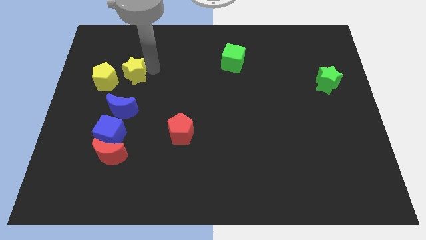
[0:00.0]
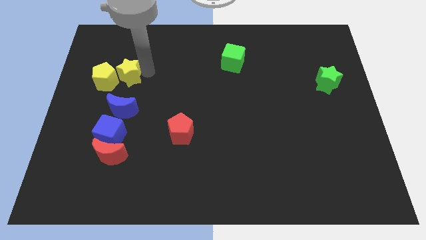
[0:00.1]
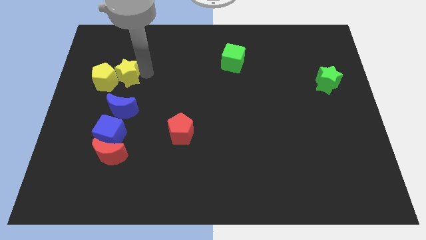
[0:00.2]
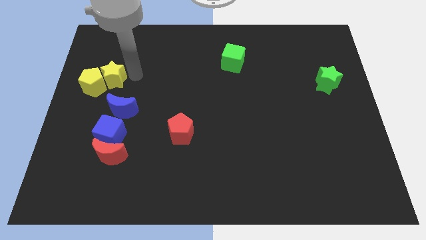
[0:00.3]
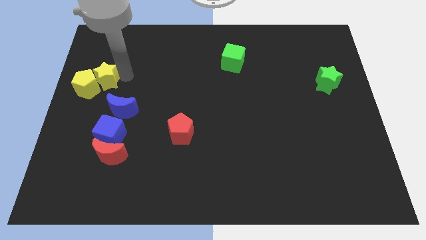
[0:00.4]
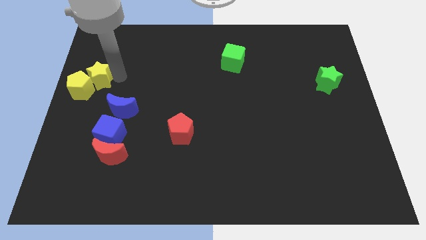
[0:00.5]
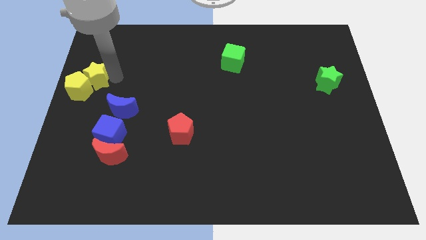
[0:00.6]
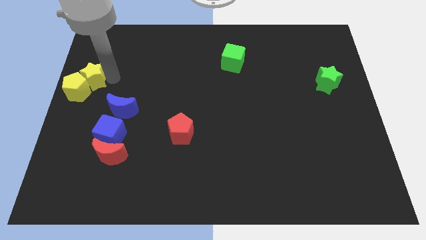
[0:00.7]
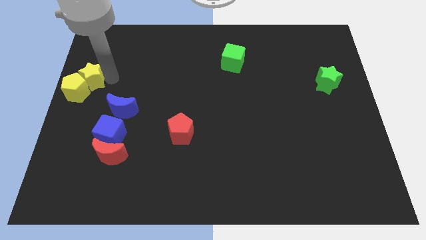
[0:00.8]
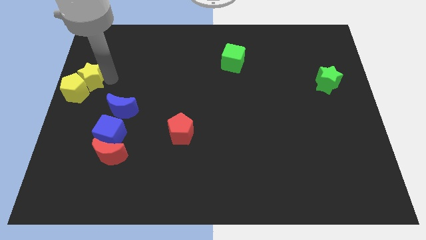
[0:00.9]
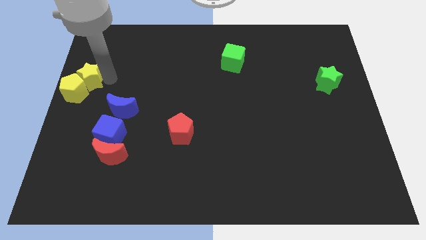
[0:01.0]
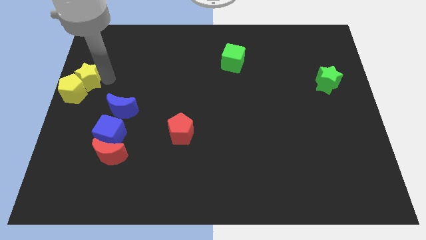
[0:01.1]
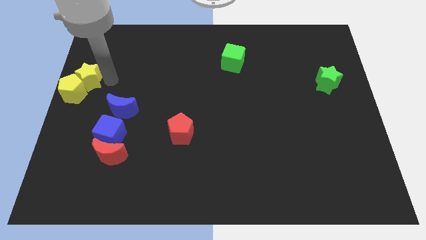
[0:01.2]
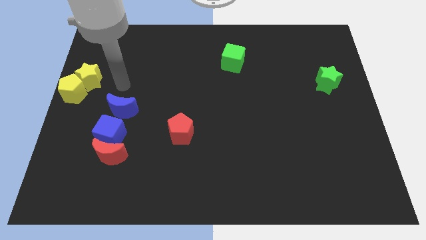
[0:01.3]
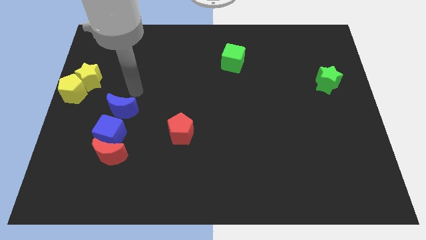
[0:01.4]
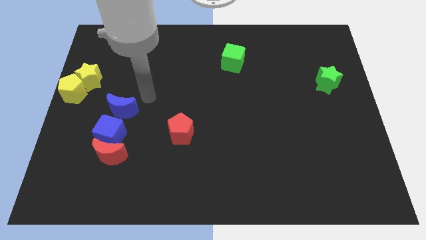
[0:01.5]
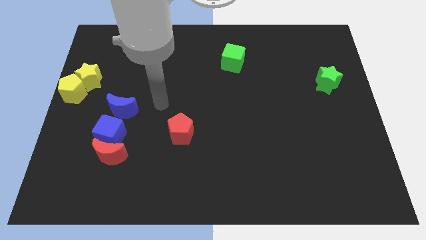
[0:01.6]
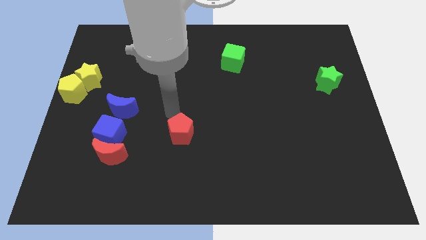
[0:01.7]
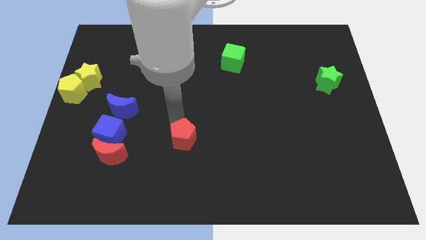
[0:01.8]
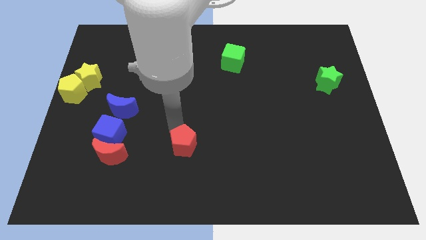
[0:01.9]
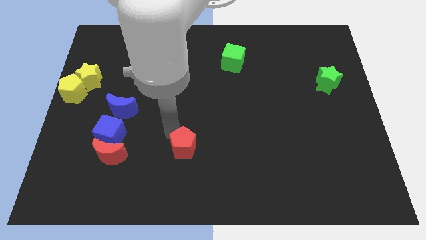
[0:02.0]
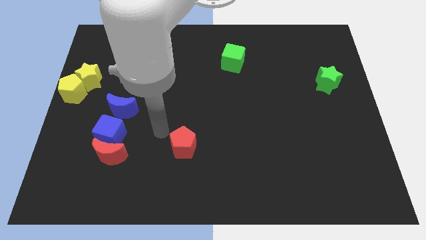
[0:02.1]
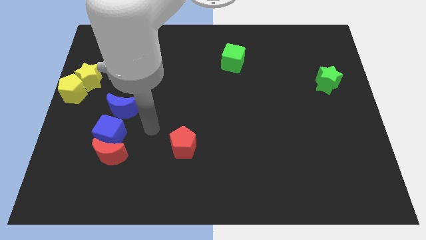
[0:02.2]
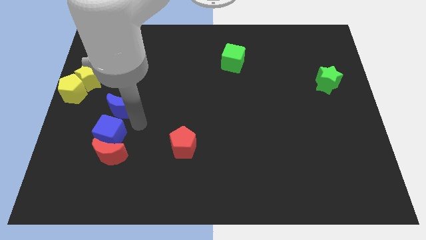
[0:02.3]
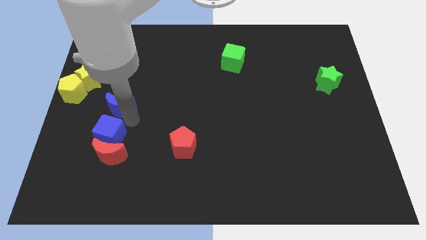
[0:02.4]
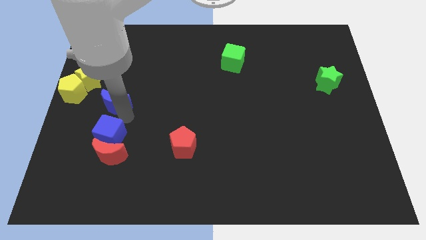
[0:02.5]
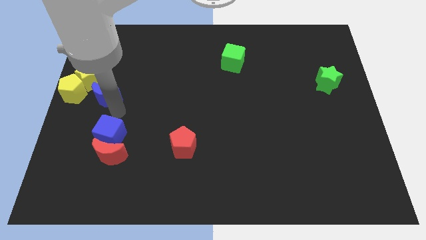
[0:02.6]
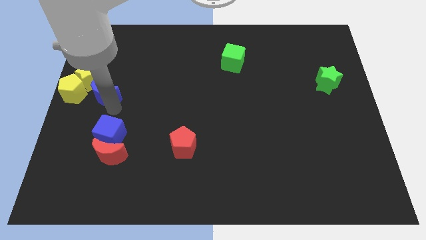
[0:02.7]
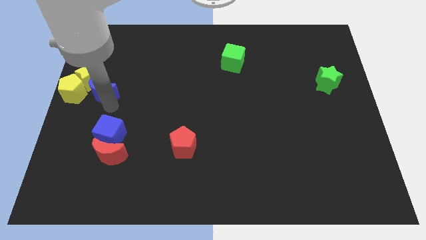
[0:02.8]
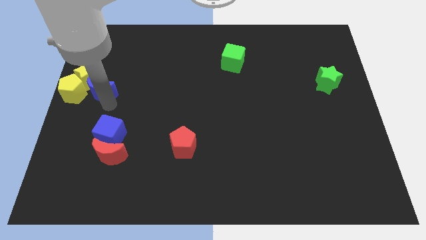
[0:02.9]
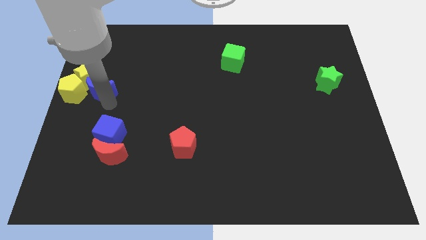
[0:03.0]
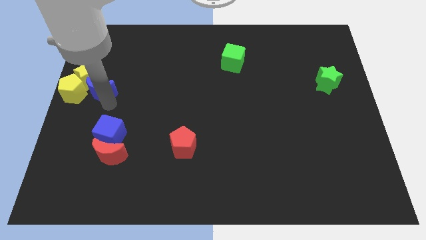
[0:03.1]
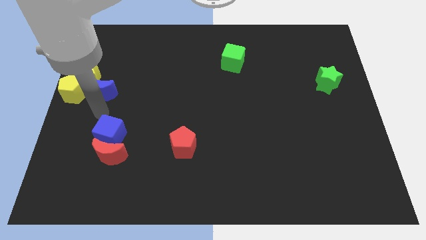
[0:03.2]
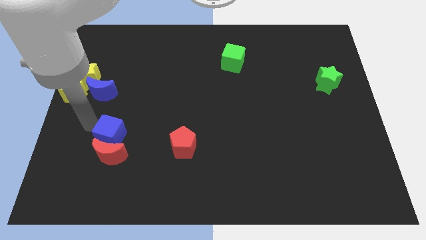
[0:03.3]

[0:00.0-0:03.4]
push blue moon into yellow star

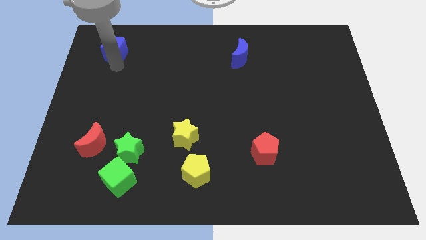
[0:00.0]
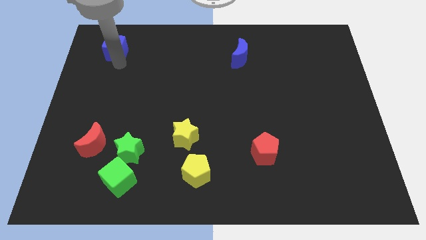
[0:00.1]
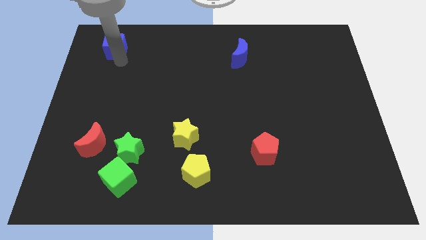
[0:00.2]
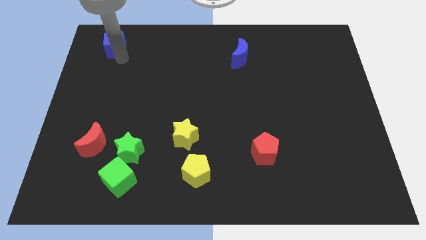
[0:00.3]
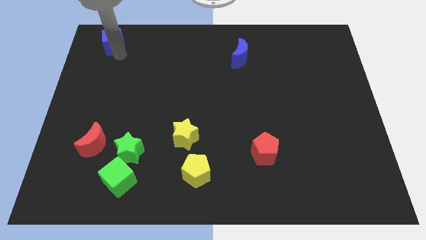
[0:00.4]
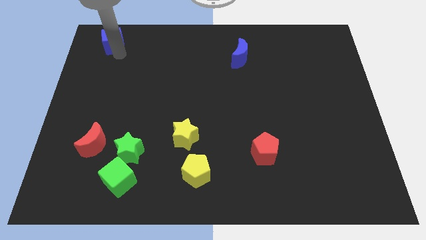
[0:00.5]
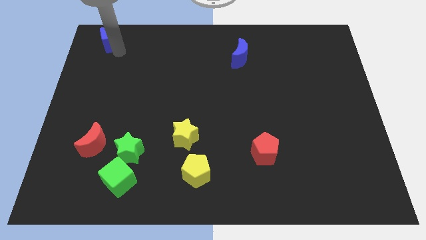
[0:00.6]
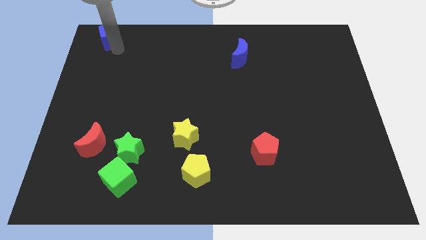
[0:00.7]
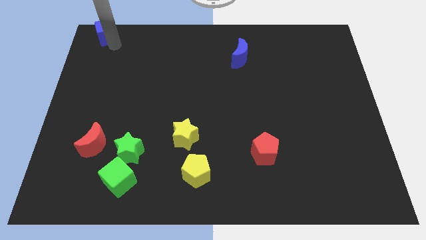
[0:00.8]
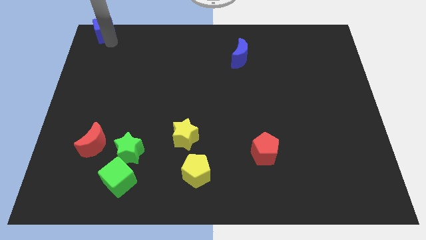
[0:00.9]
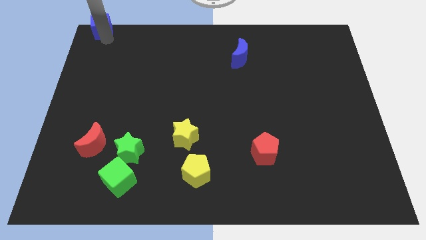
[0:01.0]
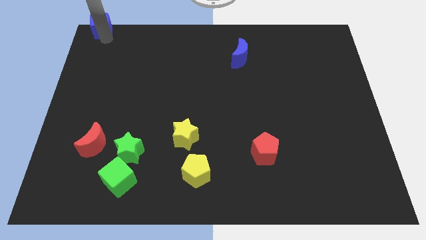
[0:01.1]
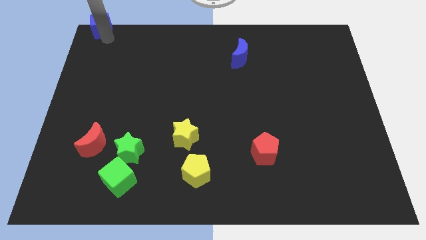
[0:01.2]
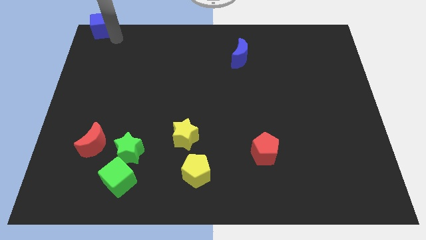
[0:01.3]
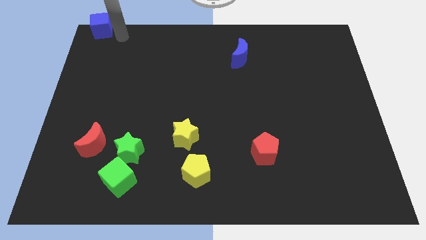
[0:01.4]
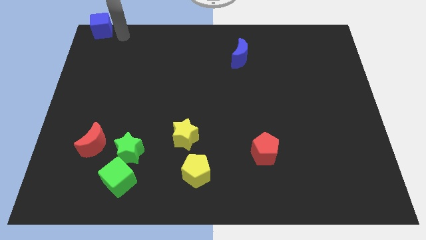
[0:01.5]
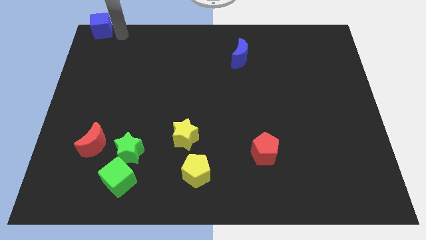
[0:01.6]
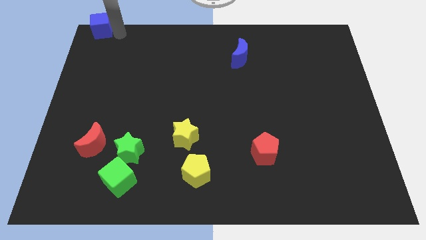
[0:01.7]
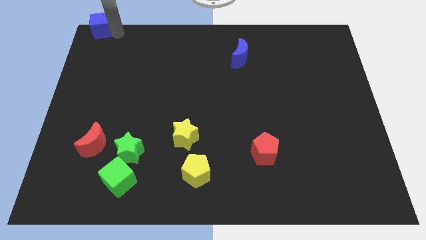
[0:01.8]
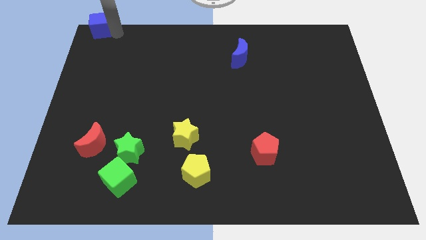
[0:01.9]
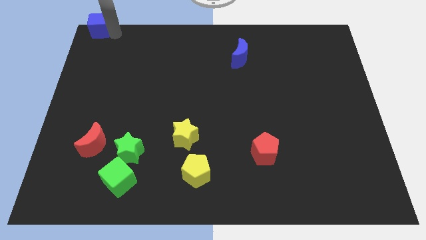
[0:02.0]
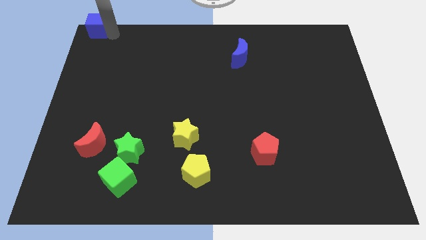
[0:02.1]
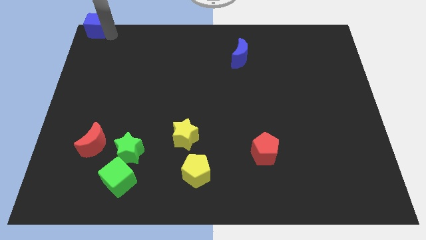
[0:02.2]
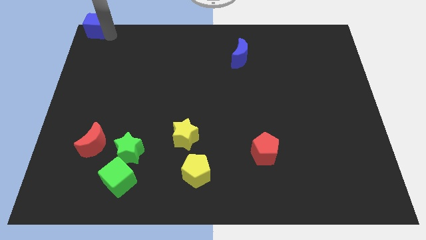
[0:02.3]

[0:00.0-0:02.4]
place the blue cube at the top left corner of the board

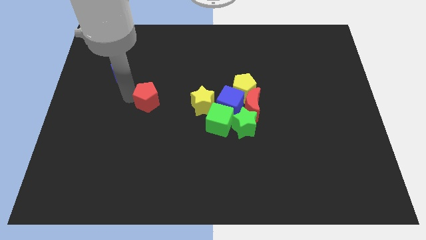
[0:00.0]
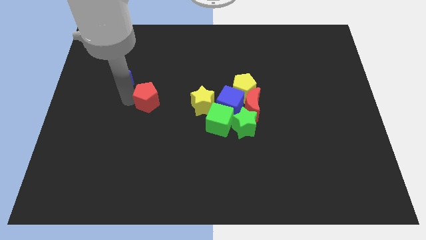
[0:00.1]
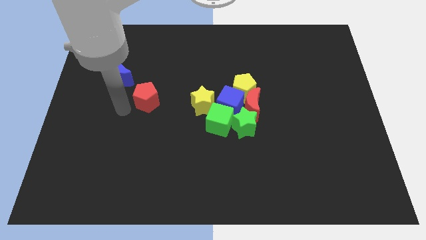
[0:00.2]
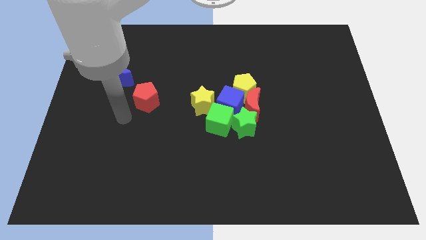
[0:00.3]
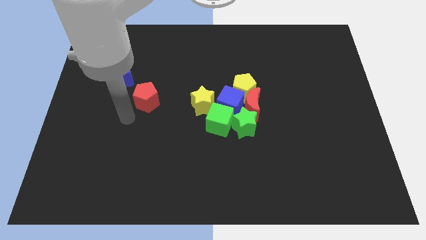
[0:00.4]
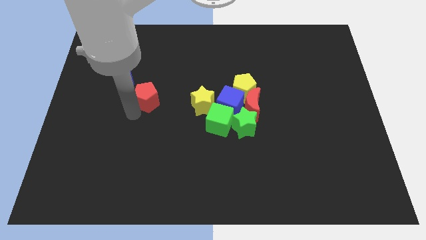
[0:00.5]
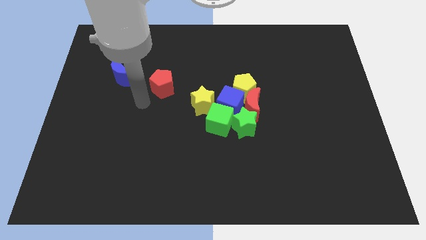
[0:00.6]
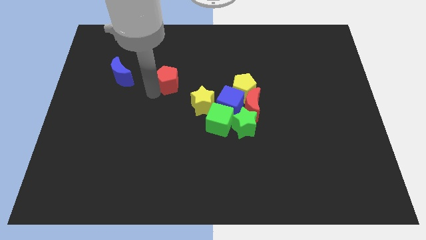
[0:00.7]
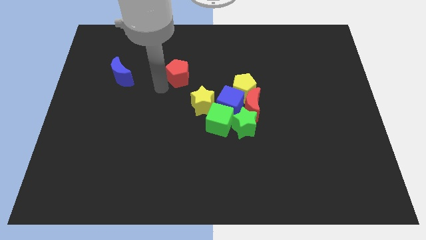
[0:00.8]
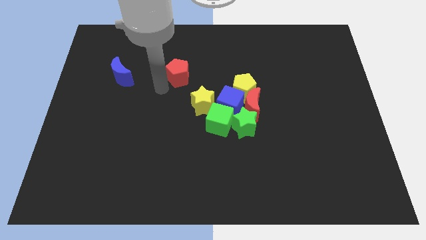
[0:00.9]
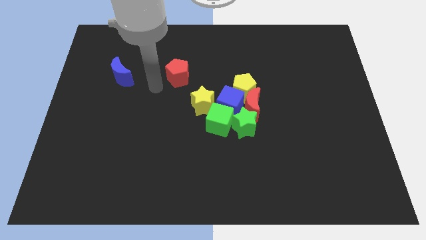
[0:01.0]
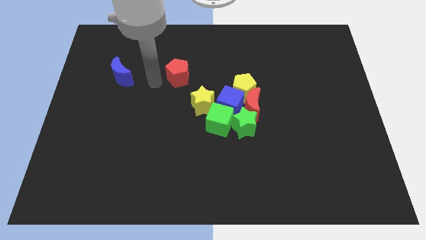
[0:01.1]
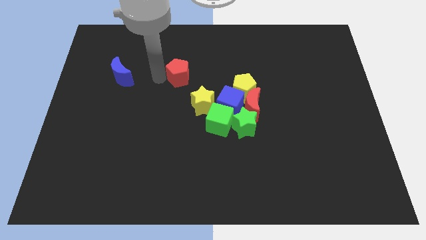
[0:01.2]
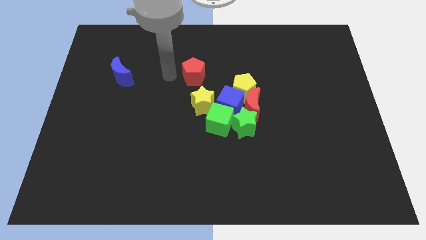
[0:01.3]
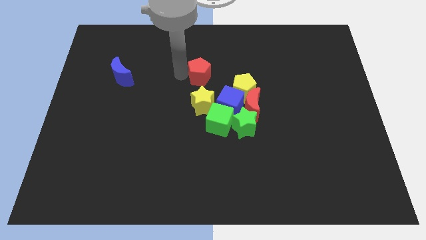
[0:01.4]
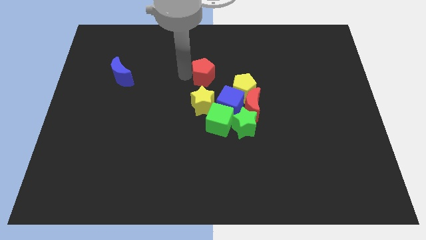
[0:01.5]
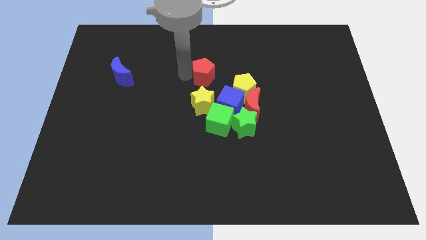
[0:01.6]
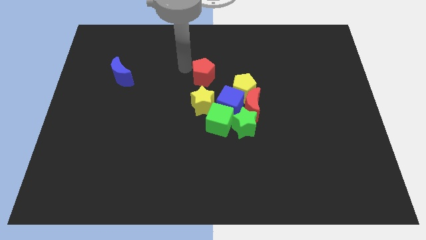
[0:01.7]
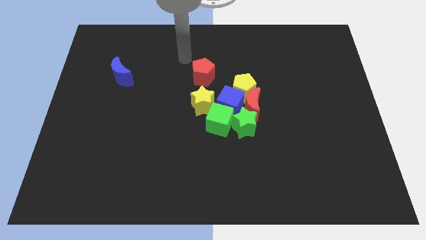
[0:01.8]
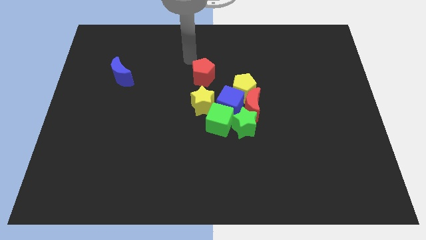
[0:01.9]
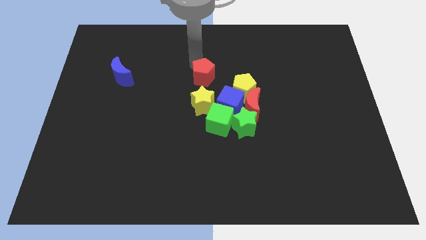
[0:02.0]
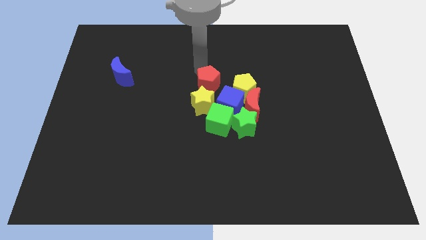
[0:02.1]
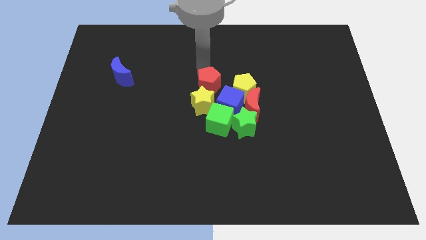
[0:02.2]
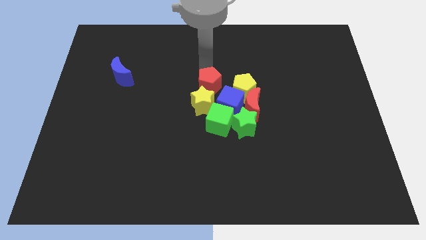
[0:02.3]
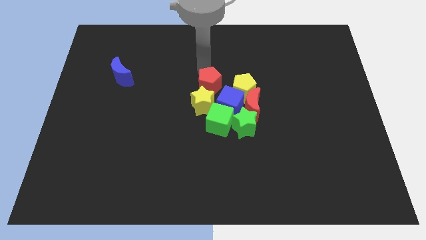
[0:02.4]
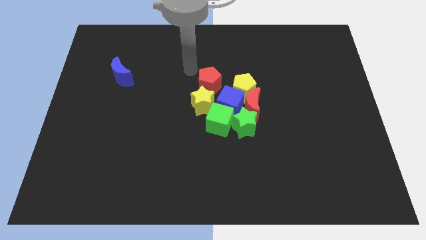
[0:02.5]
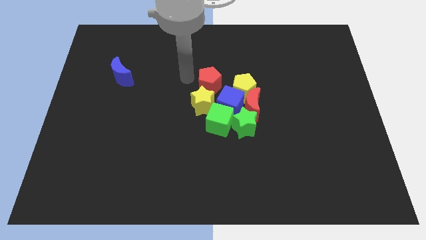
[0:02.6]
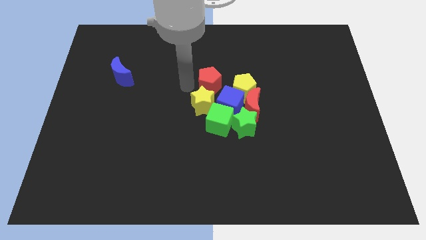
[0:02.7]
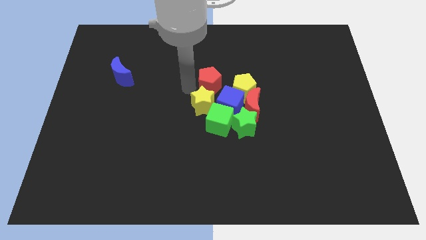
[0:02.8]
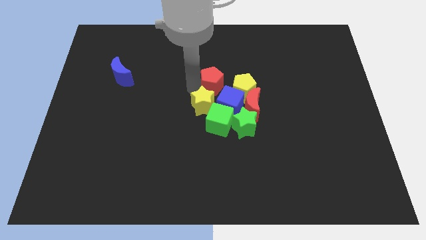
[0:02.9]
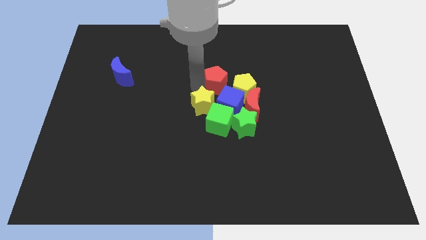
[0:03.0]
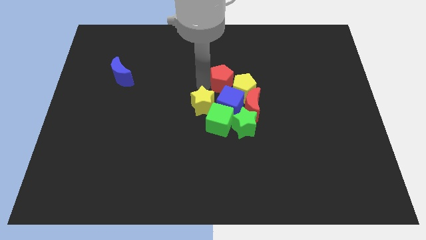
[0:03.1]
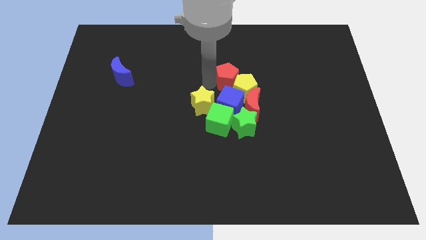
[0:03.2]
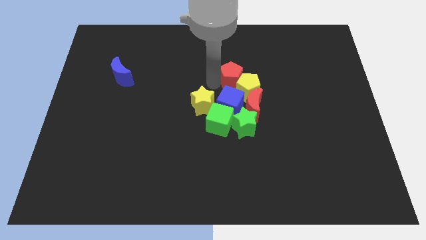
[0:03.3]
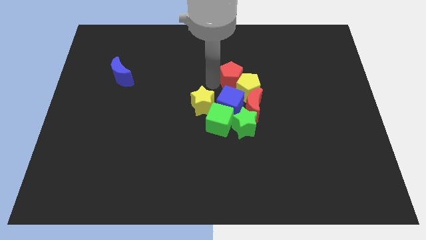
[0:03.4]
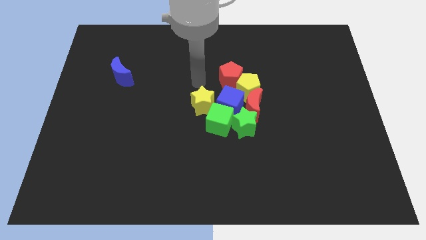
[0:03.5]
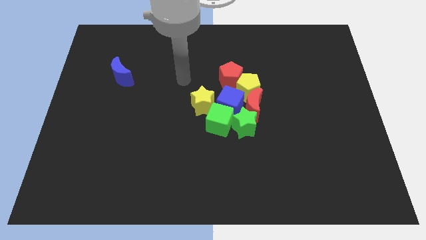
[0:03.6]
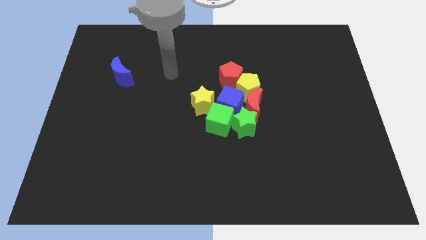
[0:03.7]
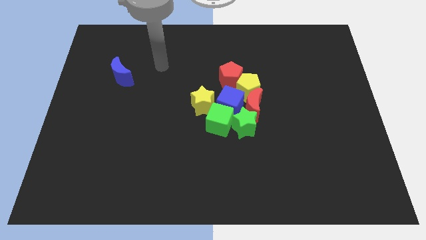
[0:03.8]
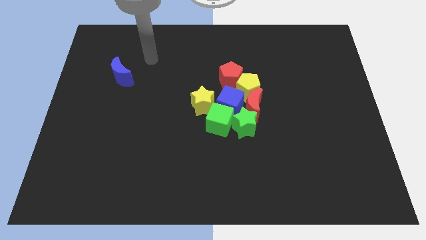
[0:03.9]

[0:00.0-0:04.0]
place the red pentagon circularly below the yellow pentagon
